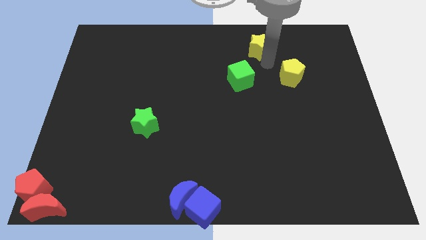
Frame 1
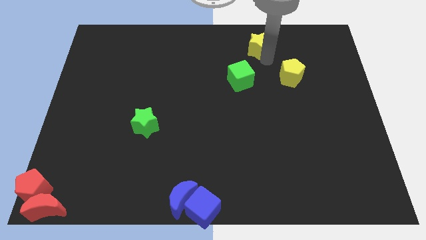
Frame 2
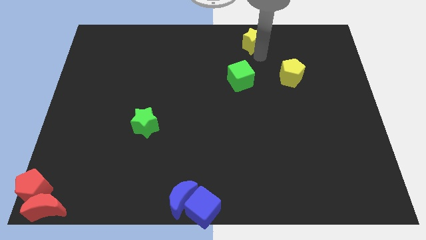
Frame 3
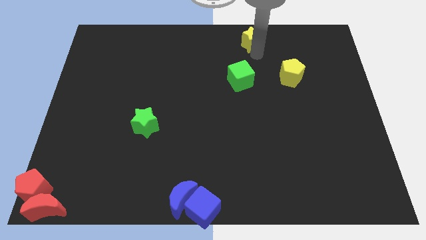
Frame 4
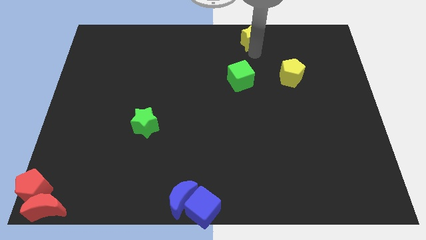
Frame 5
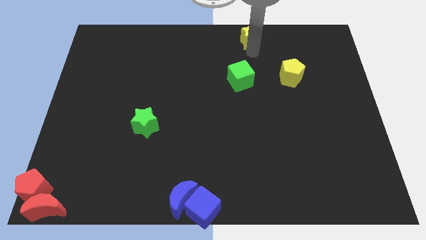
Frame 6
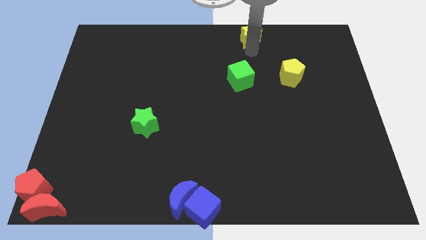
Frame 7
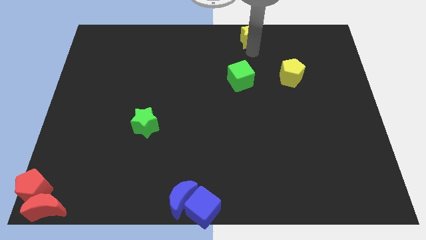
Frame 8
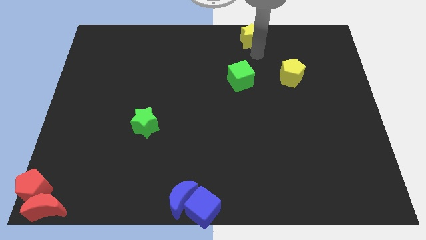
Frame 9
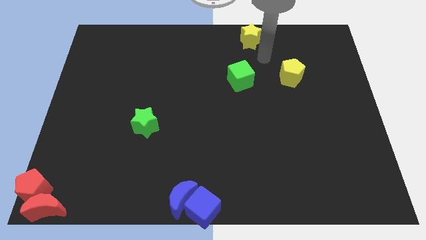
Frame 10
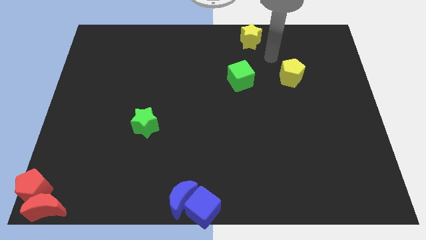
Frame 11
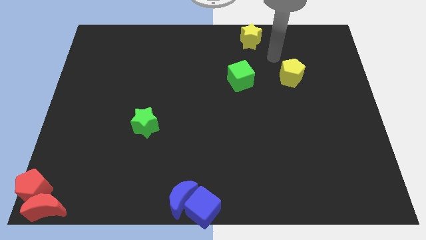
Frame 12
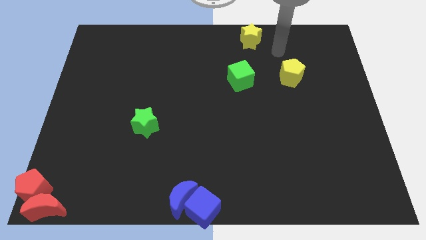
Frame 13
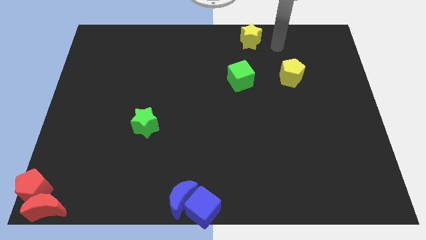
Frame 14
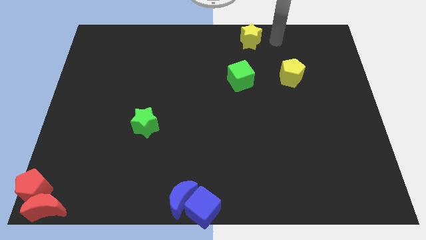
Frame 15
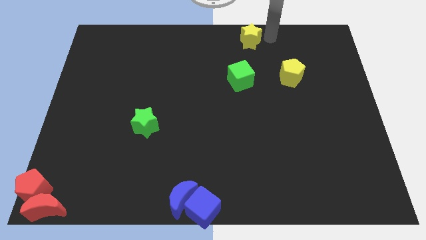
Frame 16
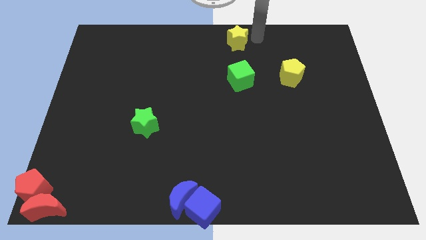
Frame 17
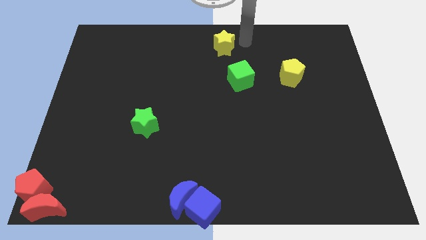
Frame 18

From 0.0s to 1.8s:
push the yellow star towards the top center of the board

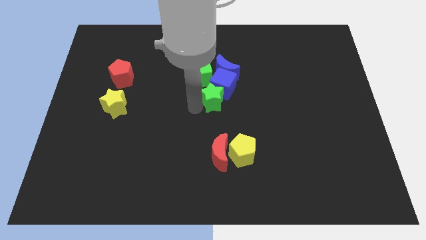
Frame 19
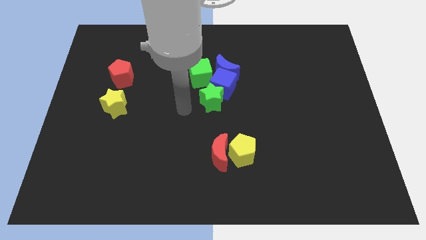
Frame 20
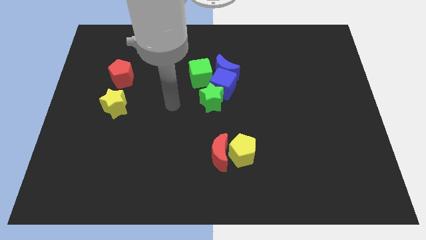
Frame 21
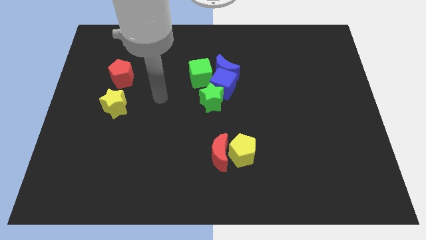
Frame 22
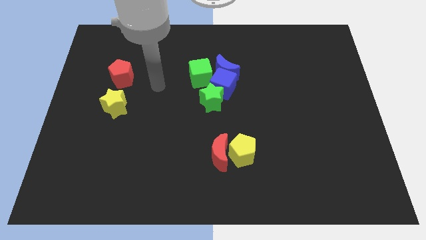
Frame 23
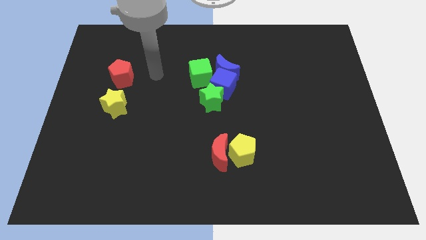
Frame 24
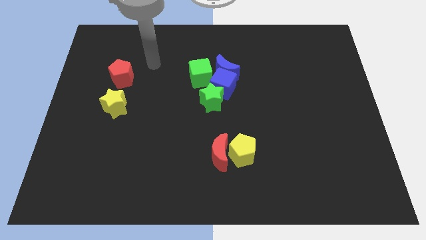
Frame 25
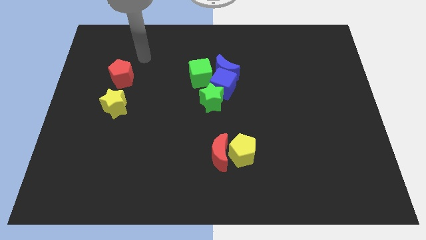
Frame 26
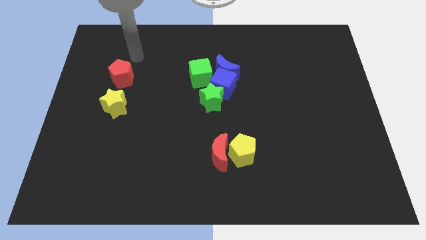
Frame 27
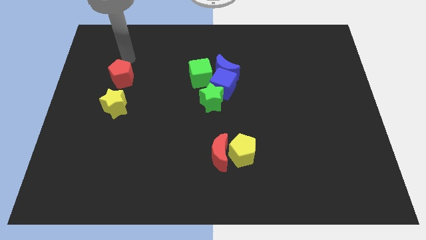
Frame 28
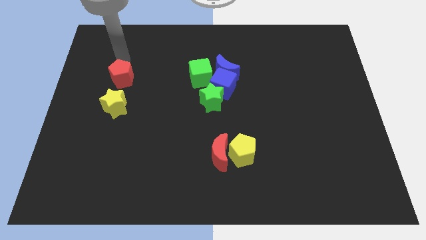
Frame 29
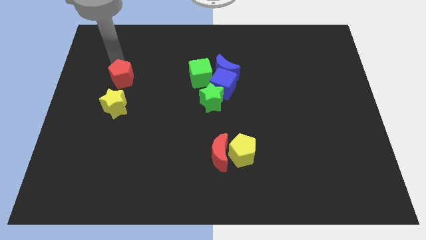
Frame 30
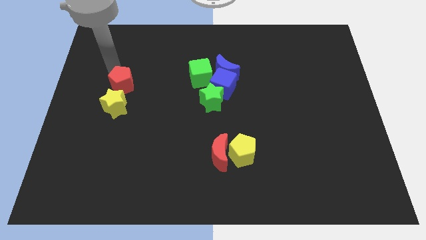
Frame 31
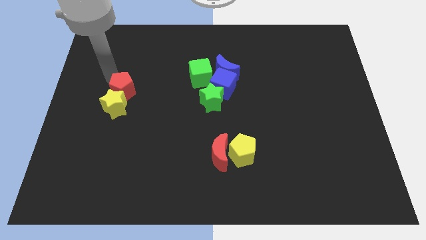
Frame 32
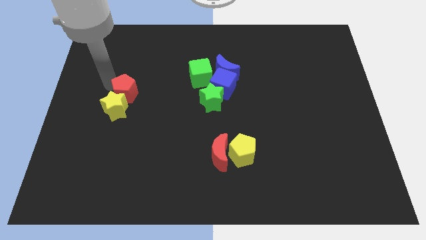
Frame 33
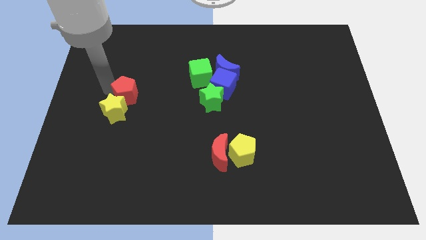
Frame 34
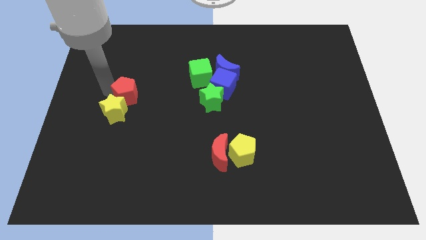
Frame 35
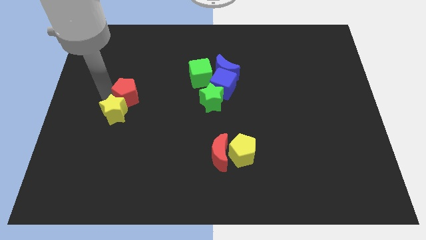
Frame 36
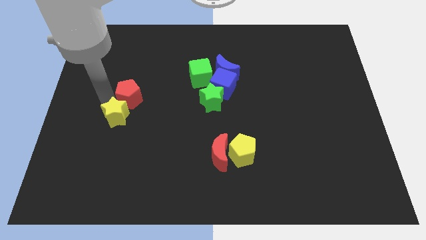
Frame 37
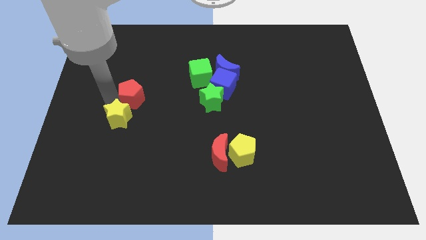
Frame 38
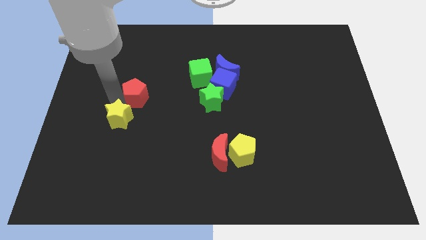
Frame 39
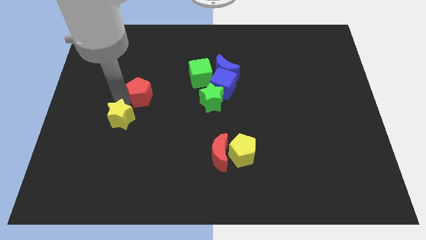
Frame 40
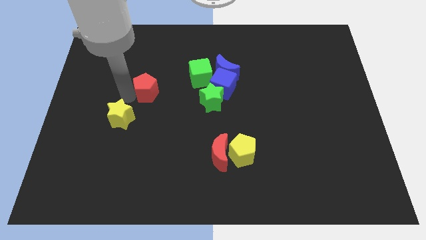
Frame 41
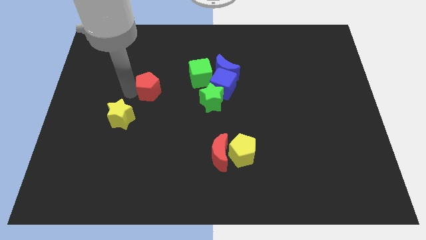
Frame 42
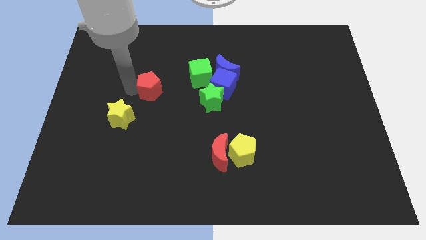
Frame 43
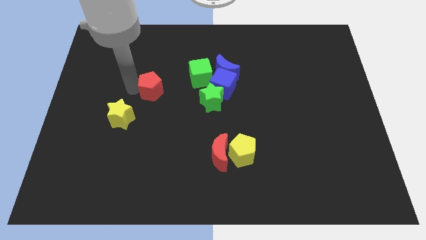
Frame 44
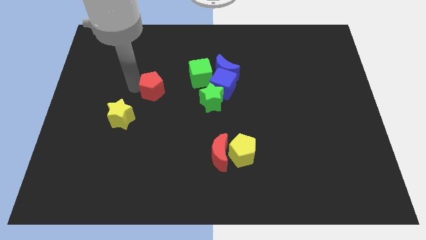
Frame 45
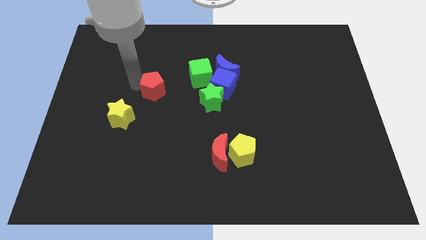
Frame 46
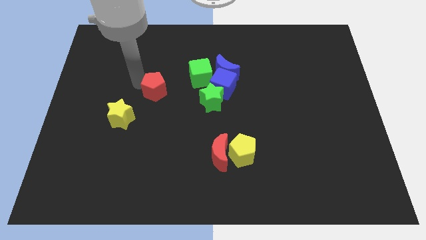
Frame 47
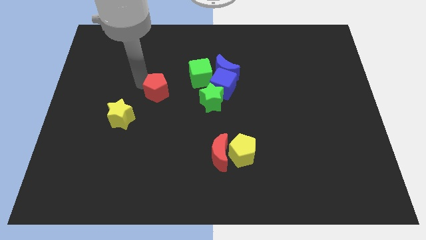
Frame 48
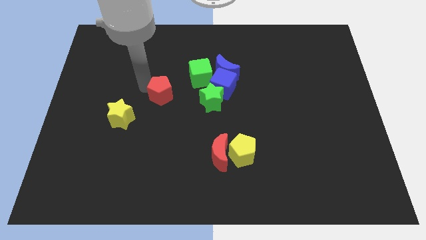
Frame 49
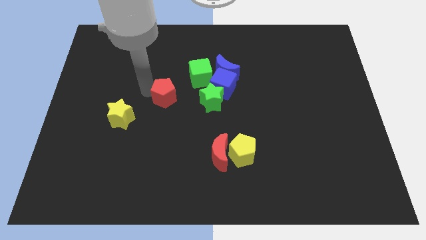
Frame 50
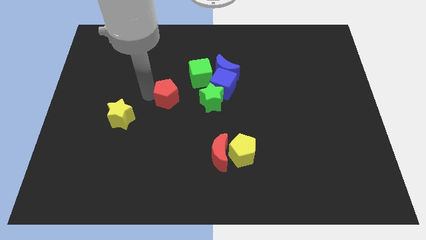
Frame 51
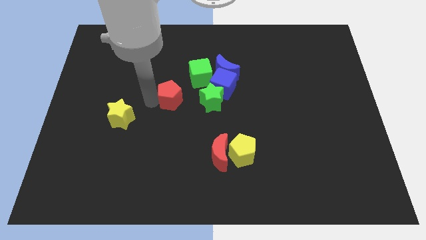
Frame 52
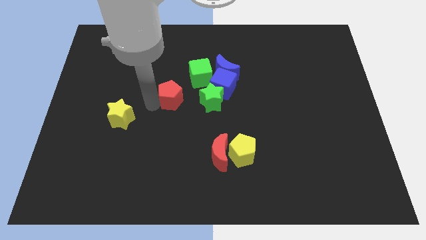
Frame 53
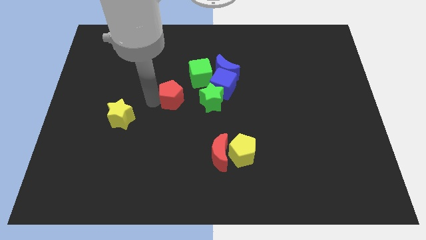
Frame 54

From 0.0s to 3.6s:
slide the red pentagon away from the yellow star

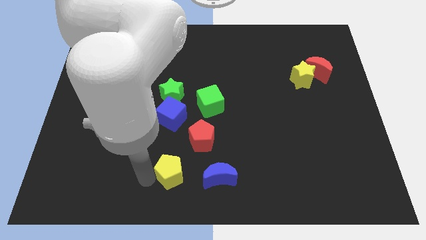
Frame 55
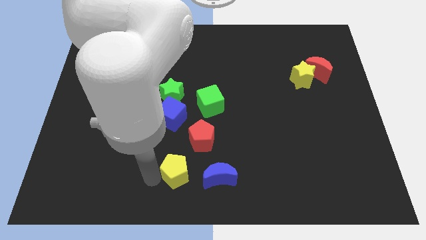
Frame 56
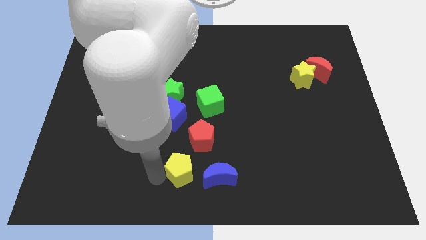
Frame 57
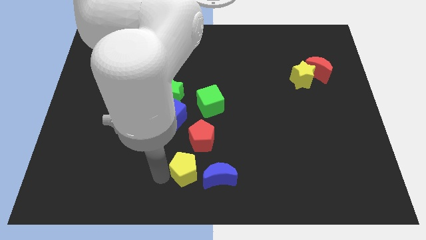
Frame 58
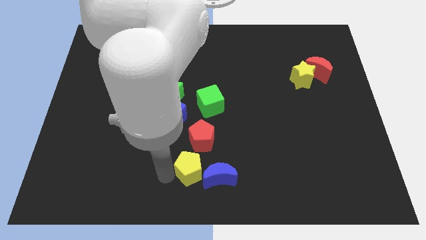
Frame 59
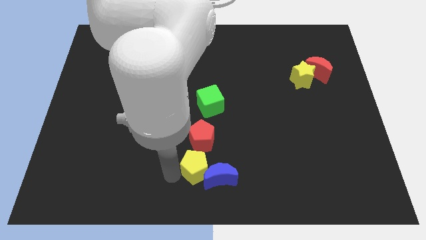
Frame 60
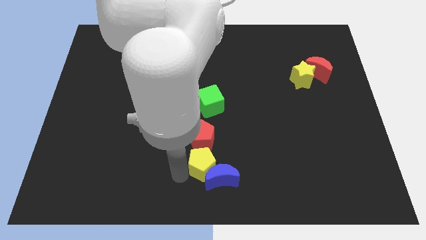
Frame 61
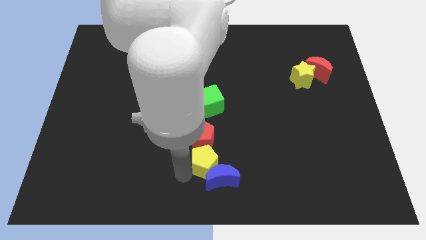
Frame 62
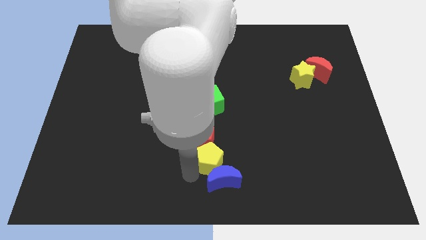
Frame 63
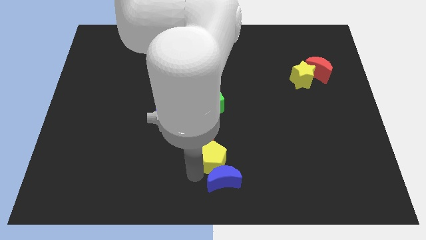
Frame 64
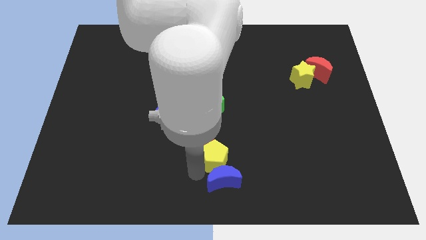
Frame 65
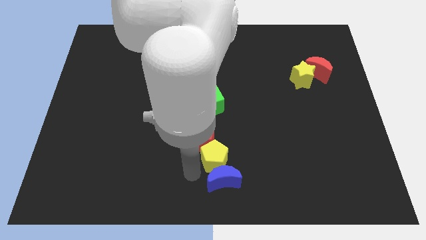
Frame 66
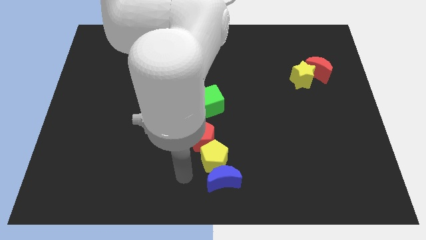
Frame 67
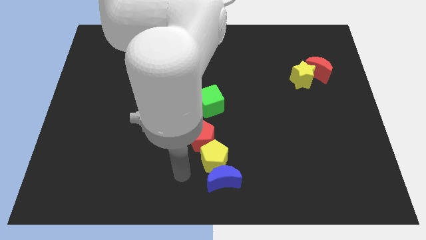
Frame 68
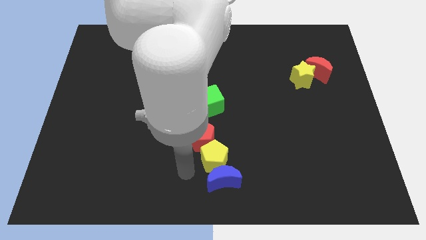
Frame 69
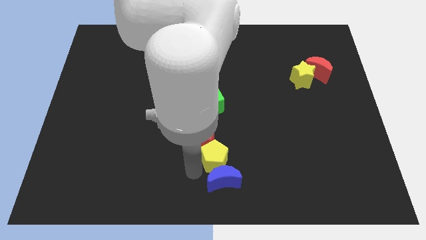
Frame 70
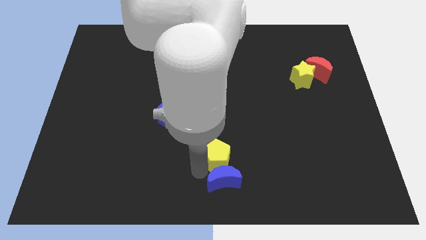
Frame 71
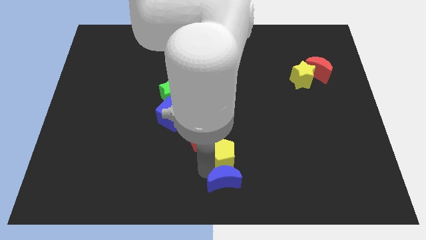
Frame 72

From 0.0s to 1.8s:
place the yellow pentagon above the blue cube

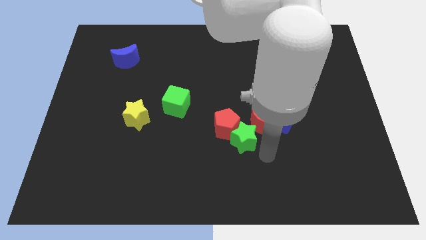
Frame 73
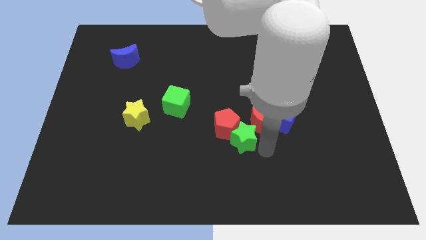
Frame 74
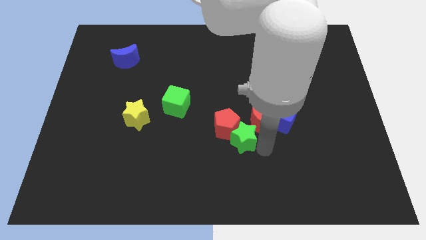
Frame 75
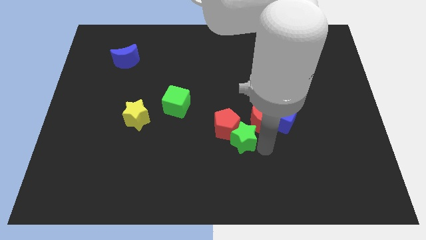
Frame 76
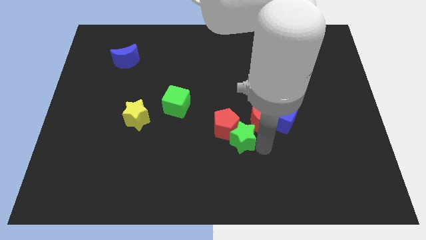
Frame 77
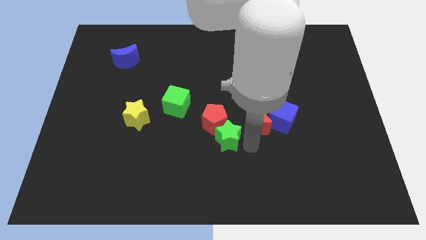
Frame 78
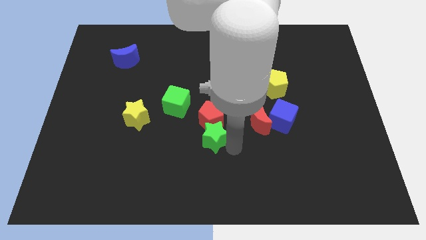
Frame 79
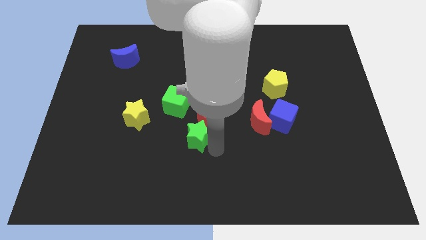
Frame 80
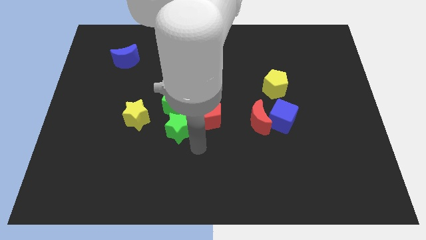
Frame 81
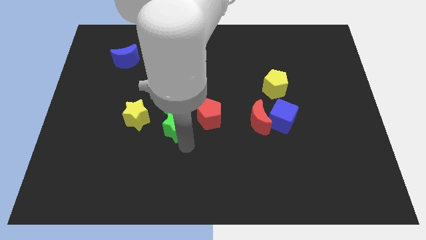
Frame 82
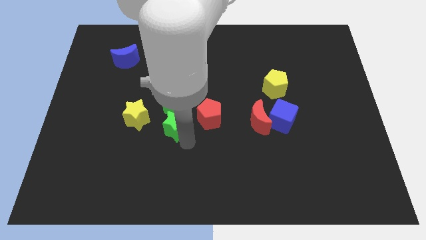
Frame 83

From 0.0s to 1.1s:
separate red pentagon and green star

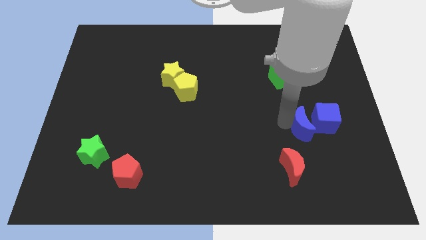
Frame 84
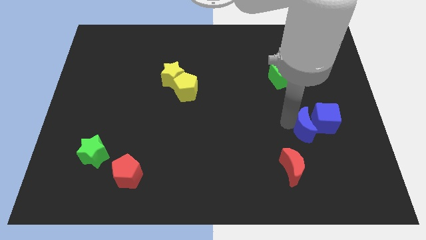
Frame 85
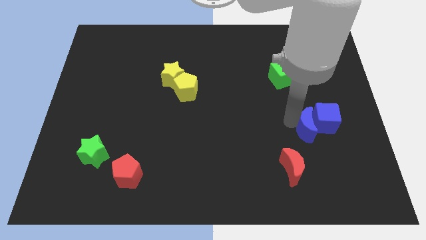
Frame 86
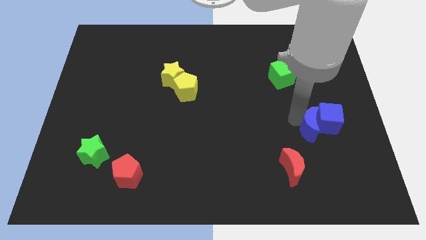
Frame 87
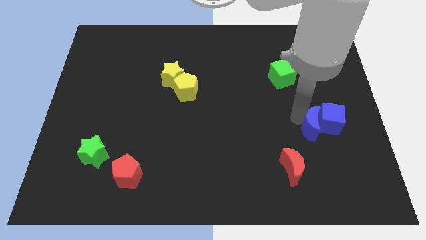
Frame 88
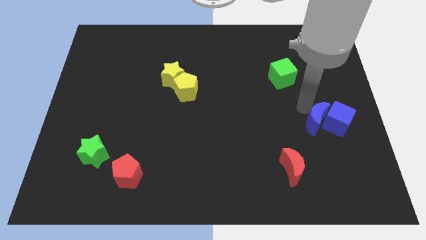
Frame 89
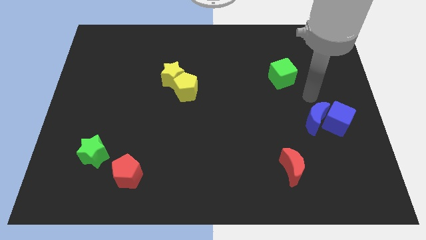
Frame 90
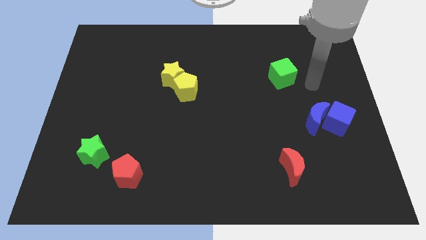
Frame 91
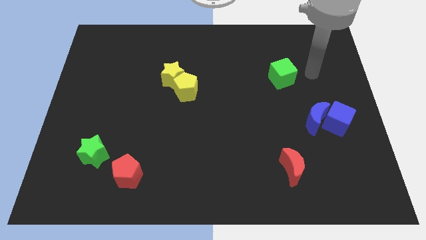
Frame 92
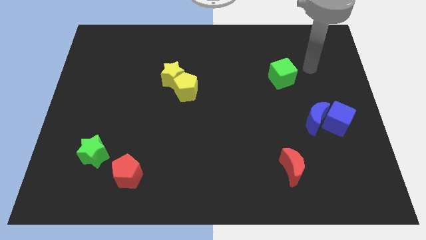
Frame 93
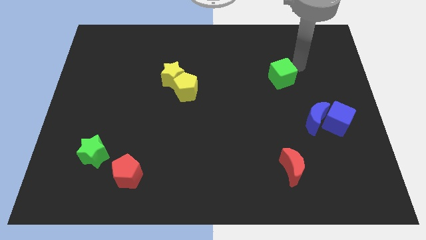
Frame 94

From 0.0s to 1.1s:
push the blue crescent into the blue cube
